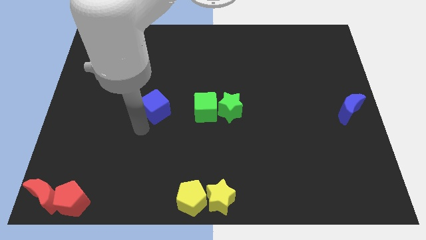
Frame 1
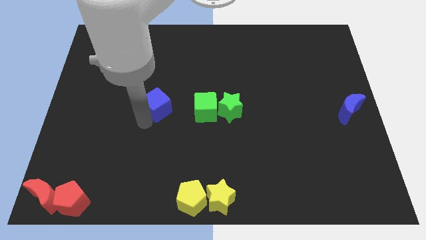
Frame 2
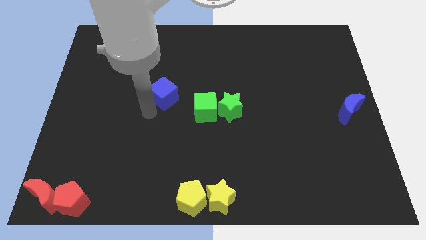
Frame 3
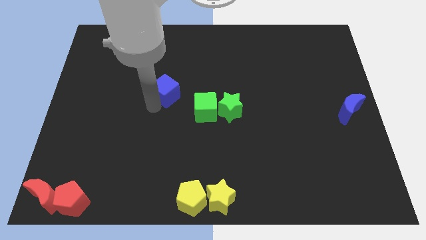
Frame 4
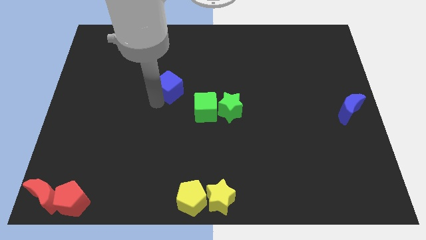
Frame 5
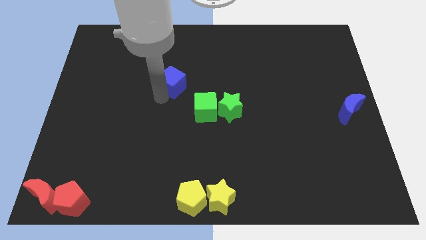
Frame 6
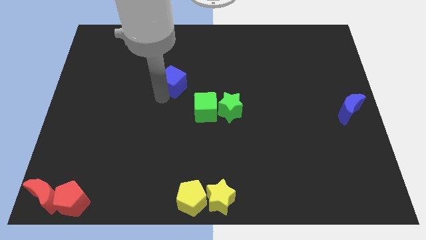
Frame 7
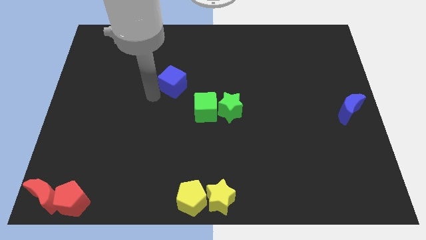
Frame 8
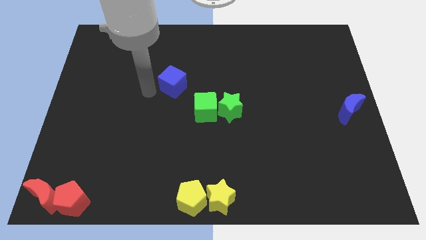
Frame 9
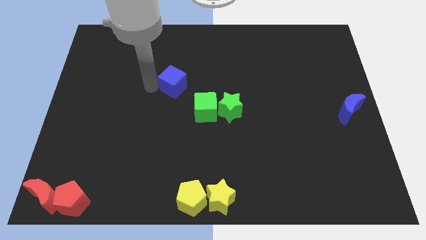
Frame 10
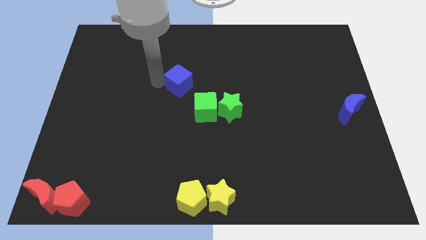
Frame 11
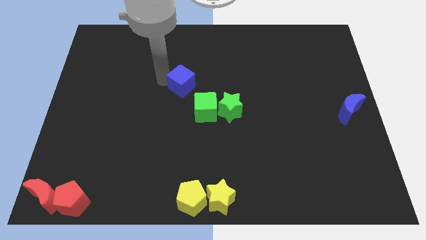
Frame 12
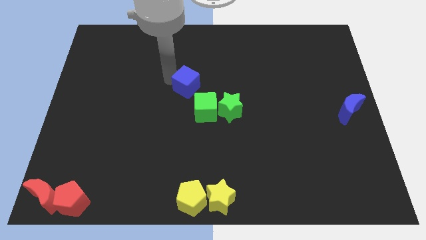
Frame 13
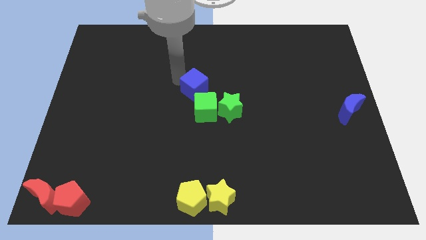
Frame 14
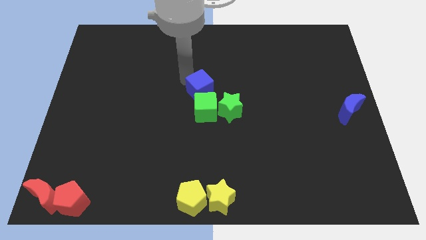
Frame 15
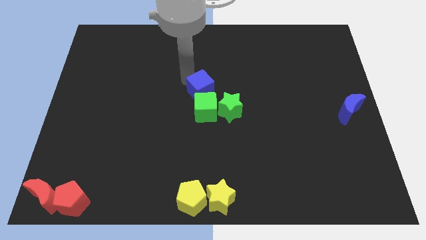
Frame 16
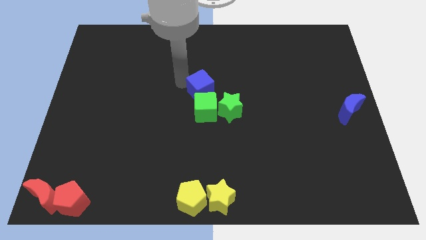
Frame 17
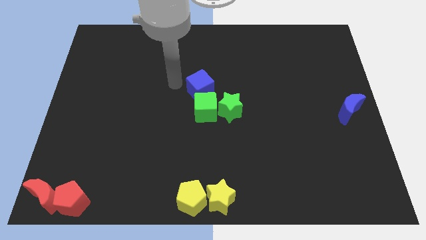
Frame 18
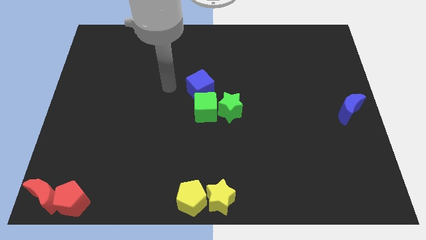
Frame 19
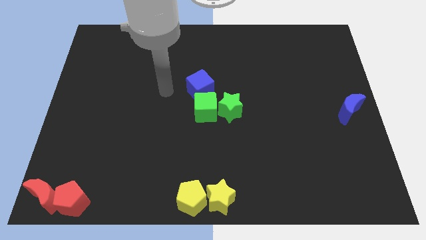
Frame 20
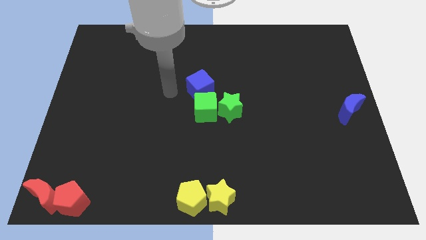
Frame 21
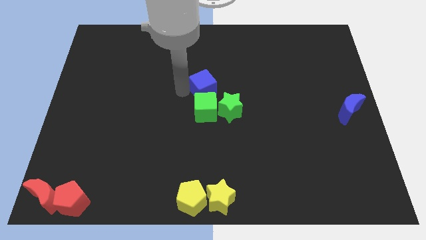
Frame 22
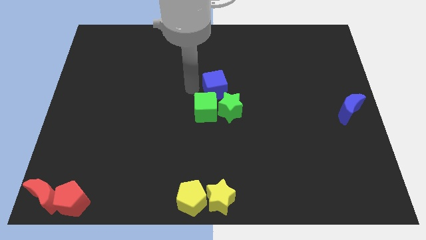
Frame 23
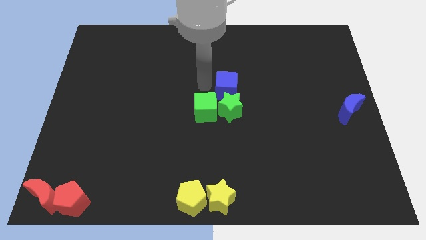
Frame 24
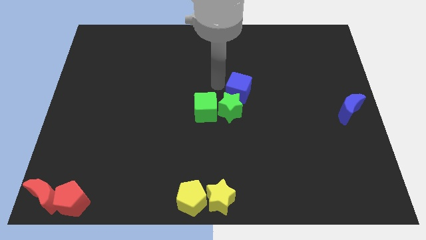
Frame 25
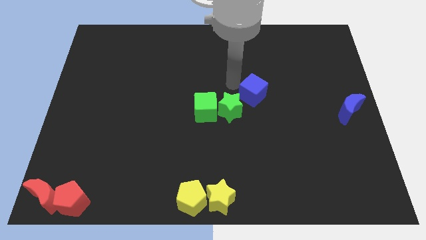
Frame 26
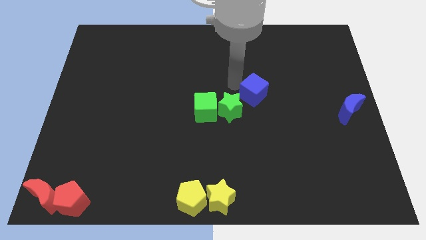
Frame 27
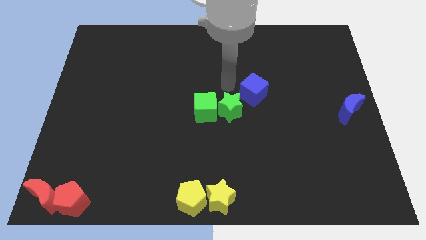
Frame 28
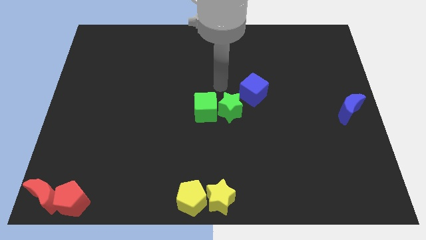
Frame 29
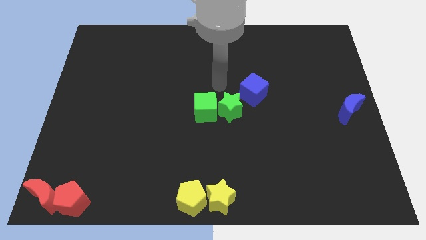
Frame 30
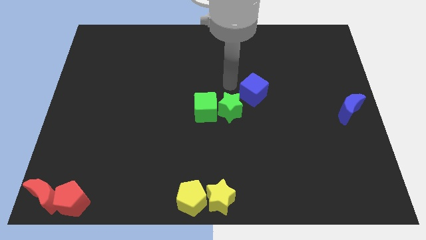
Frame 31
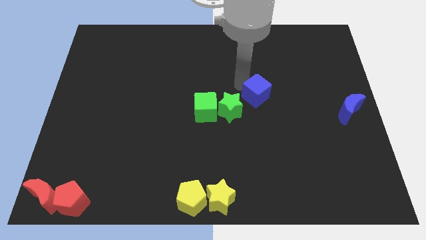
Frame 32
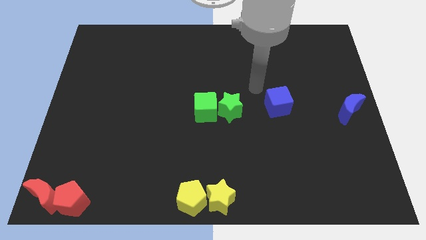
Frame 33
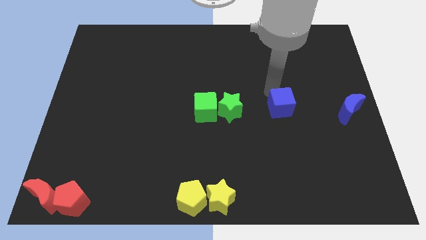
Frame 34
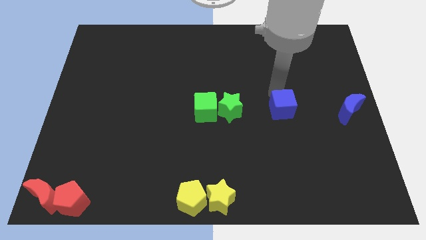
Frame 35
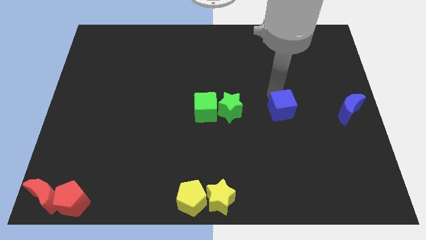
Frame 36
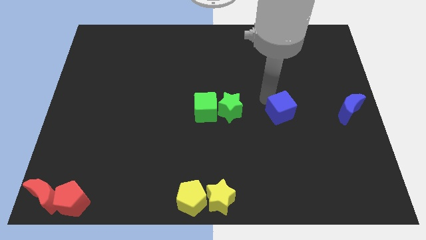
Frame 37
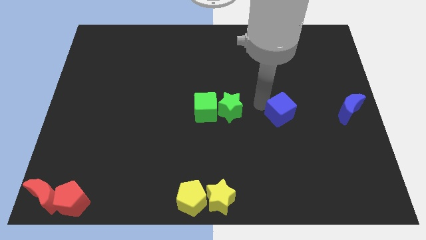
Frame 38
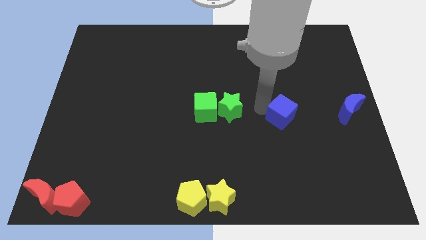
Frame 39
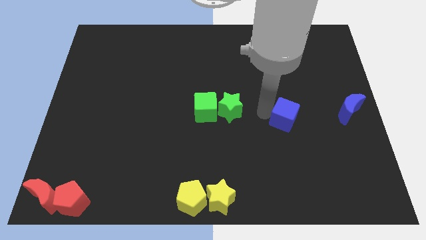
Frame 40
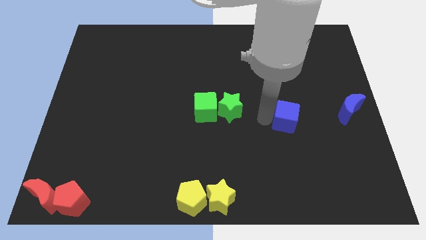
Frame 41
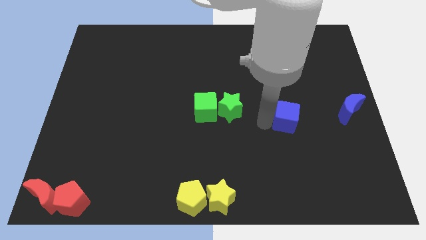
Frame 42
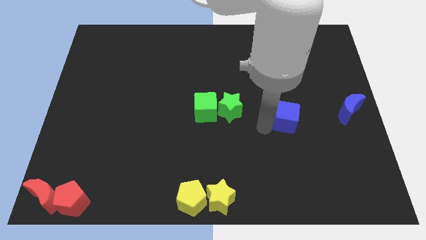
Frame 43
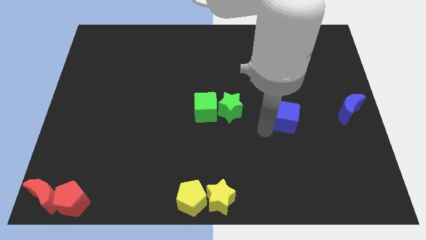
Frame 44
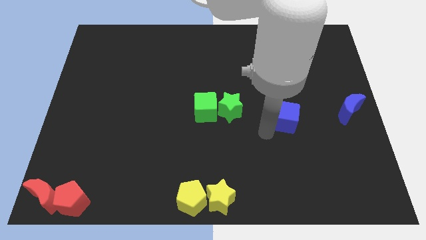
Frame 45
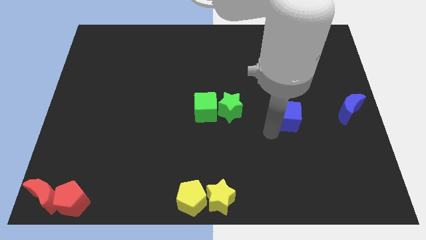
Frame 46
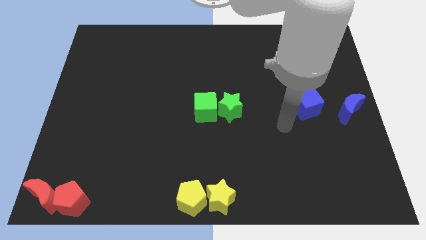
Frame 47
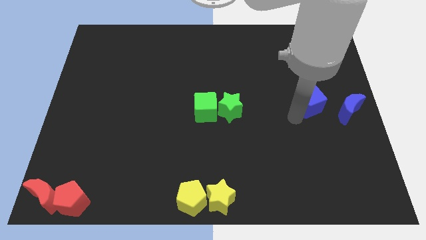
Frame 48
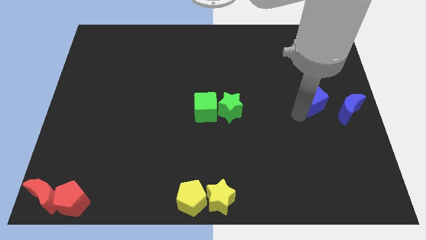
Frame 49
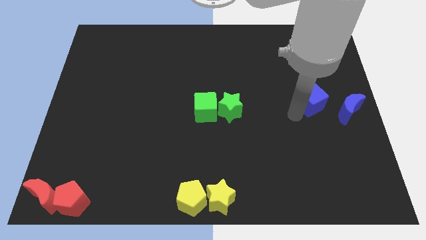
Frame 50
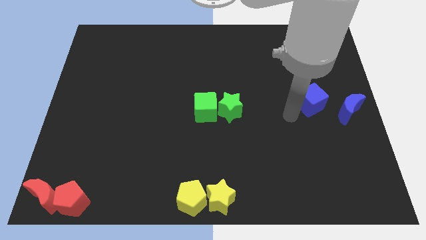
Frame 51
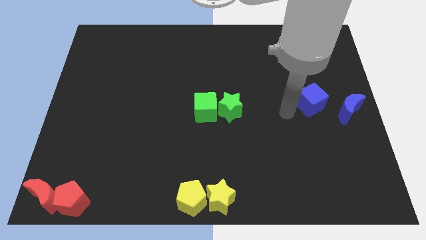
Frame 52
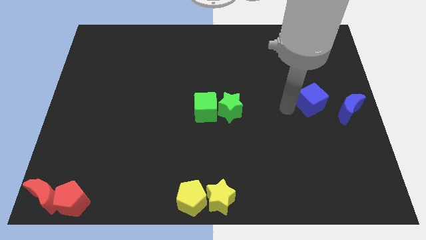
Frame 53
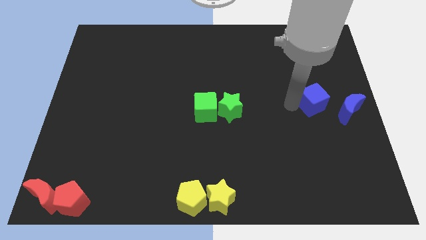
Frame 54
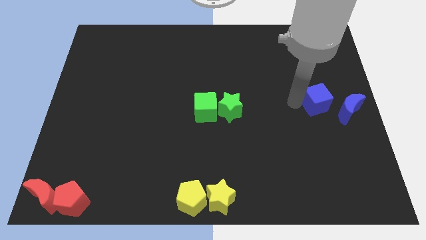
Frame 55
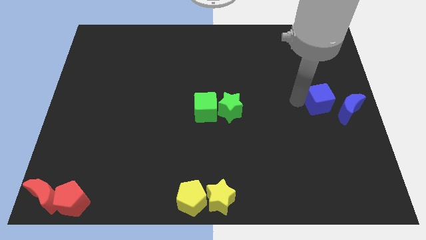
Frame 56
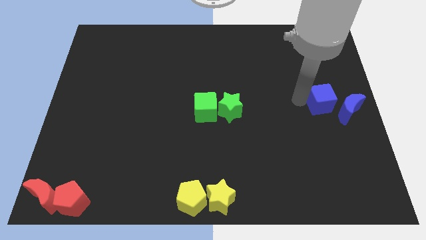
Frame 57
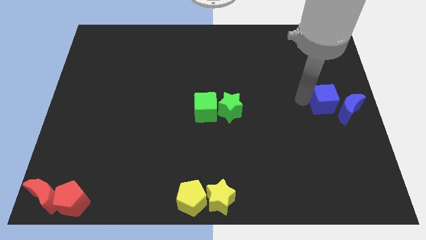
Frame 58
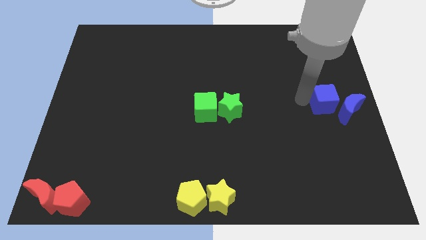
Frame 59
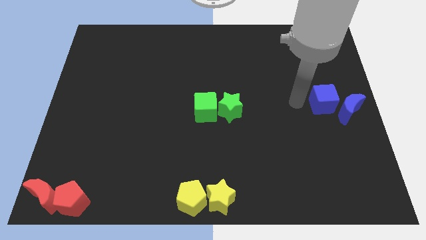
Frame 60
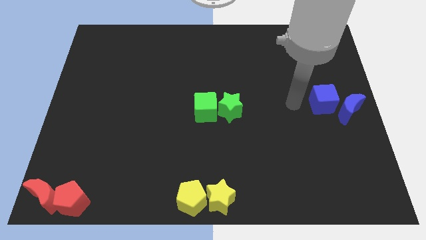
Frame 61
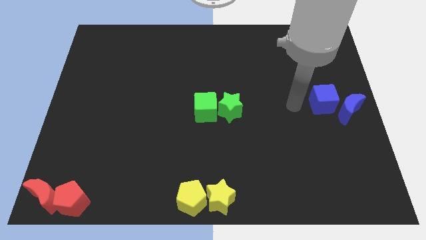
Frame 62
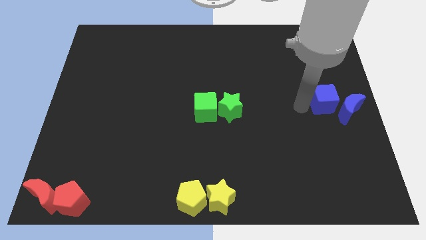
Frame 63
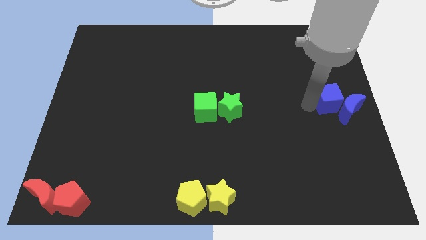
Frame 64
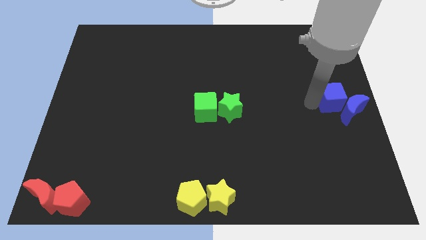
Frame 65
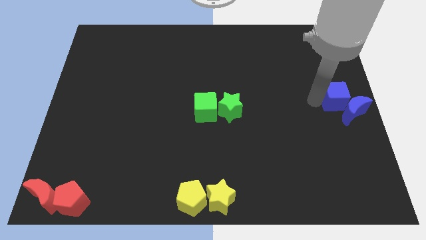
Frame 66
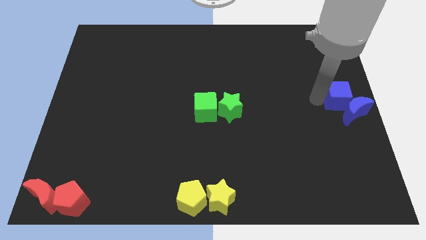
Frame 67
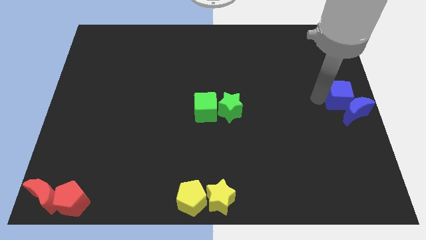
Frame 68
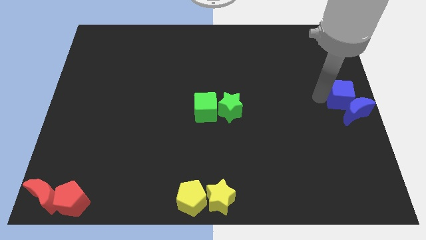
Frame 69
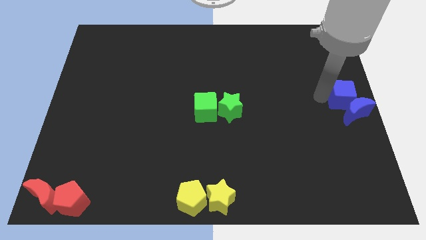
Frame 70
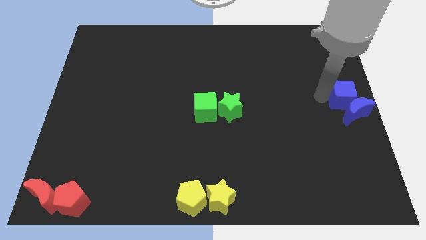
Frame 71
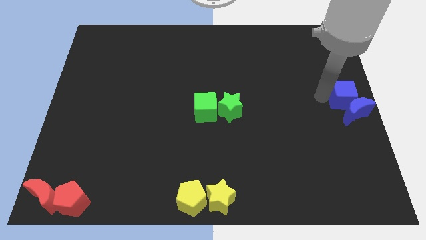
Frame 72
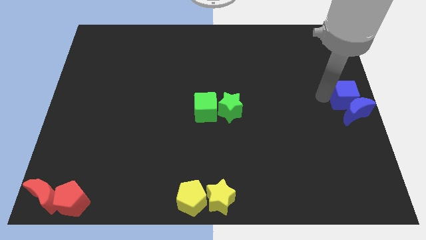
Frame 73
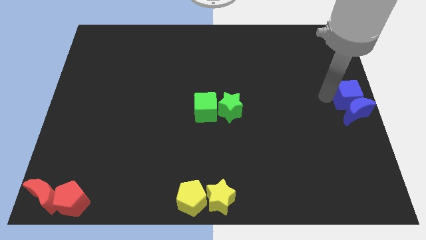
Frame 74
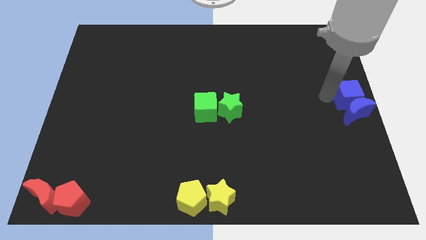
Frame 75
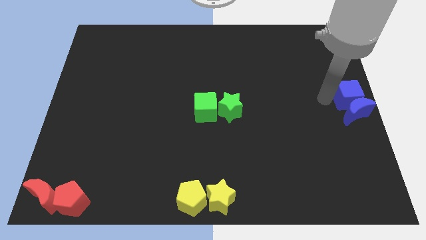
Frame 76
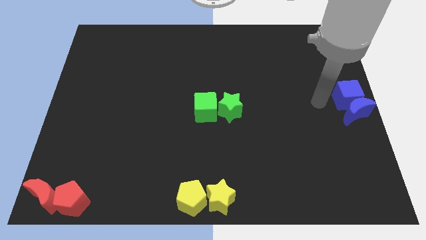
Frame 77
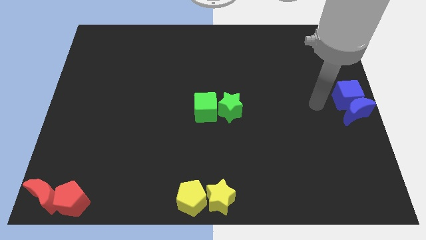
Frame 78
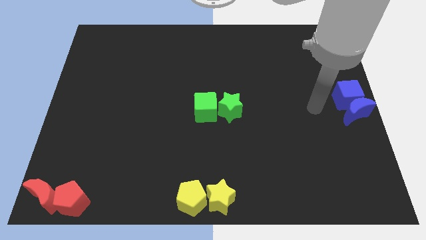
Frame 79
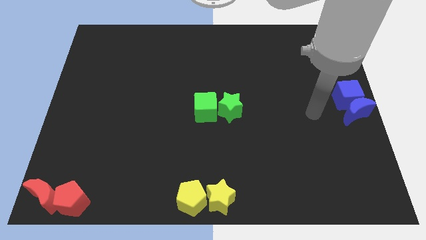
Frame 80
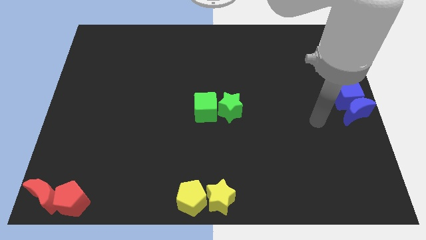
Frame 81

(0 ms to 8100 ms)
place the blue cube above the blue crescent

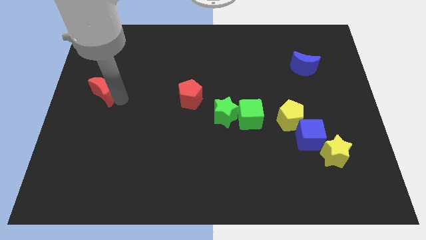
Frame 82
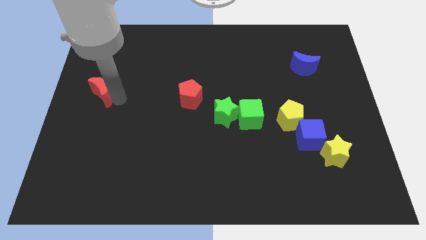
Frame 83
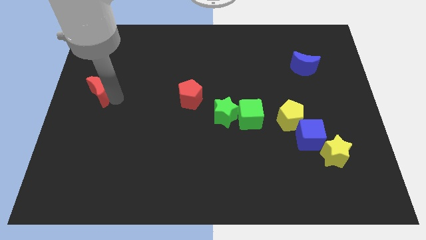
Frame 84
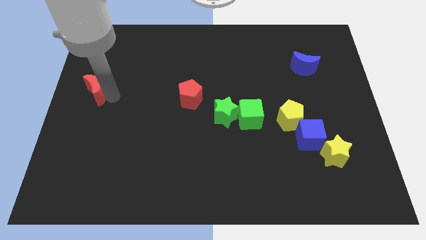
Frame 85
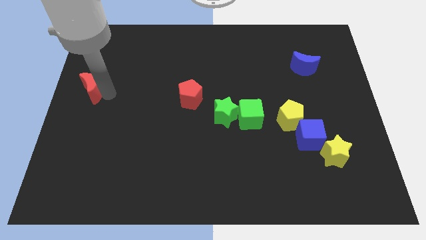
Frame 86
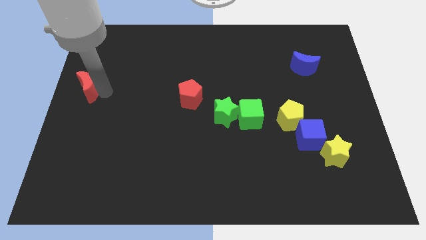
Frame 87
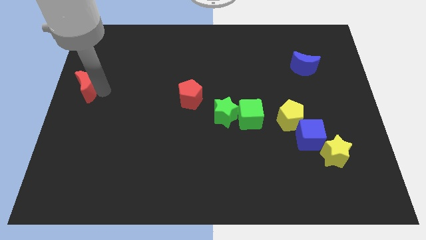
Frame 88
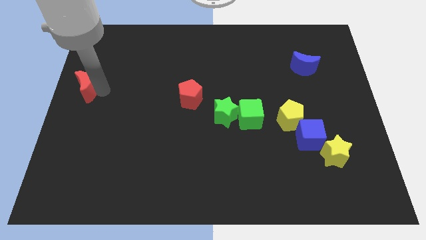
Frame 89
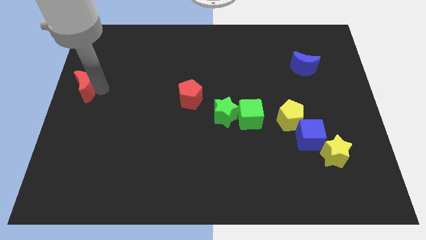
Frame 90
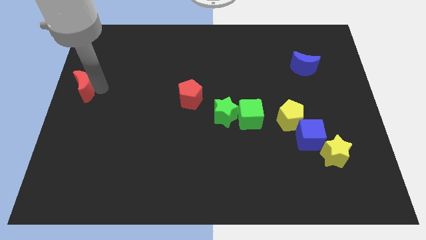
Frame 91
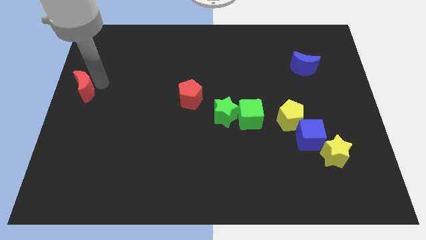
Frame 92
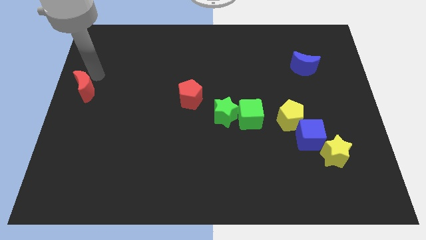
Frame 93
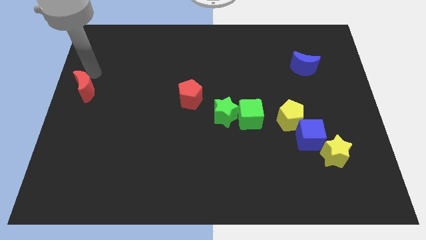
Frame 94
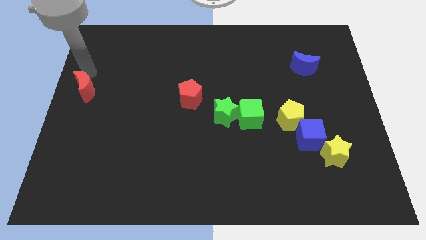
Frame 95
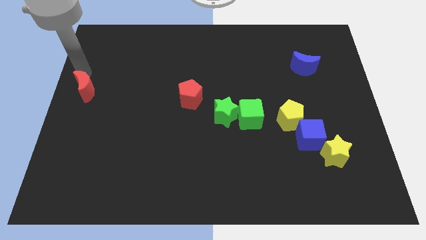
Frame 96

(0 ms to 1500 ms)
move the red moon to the center left
